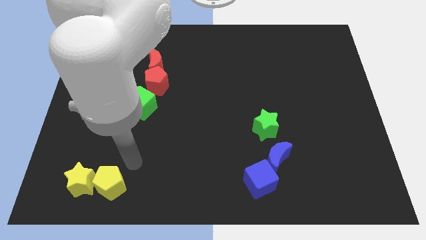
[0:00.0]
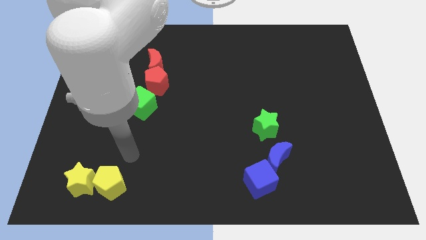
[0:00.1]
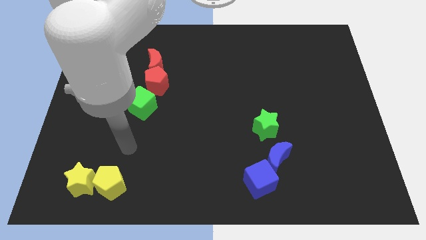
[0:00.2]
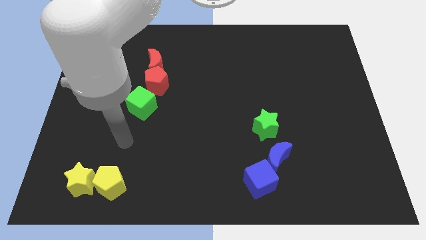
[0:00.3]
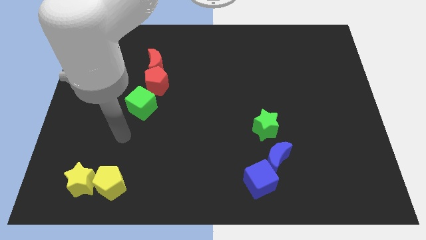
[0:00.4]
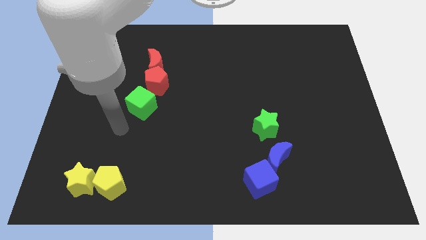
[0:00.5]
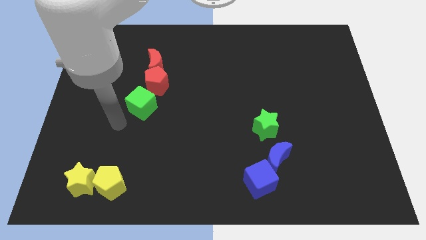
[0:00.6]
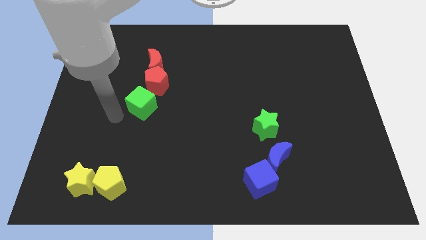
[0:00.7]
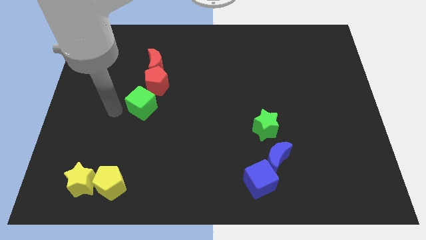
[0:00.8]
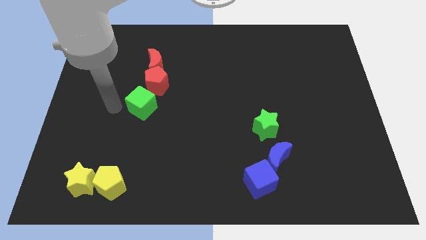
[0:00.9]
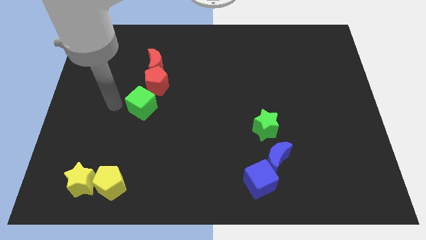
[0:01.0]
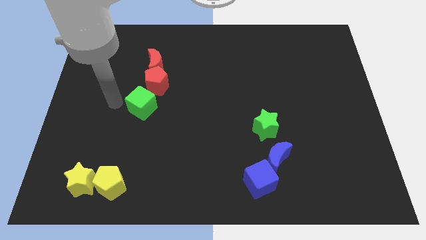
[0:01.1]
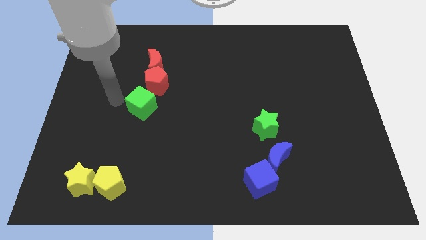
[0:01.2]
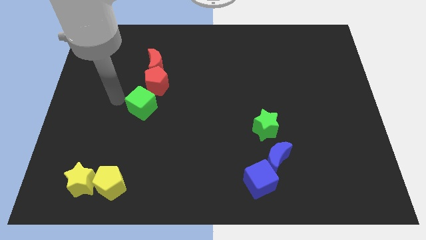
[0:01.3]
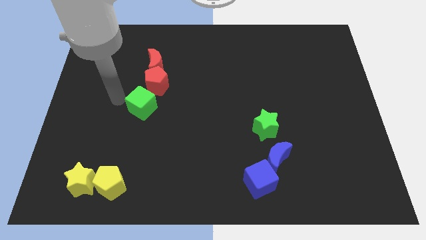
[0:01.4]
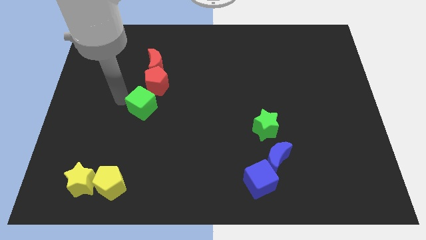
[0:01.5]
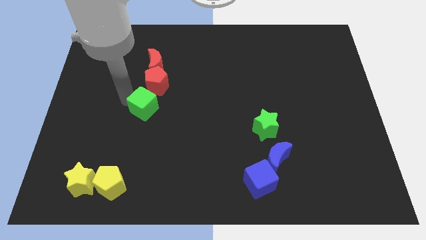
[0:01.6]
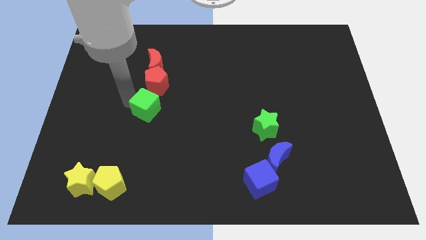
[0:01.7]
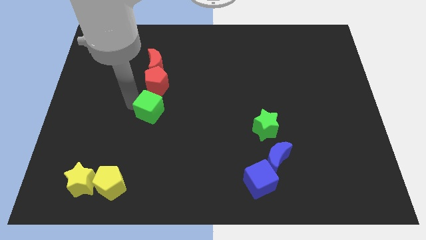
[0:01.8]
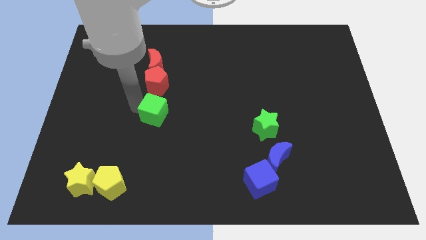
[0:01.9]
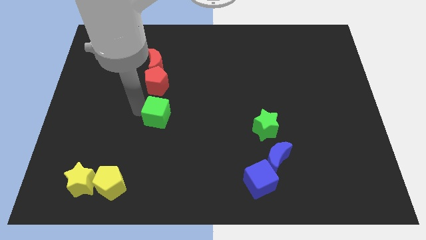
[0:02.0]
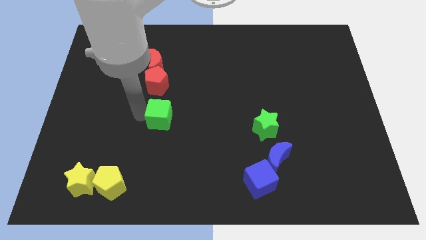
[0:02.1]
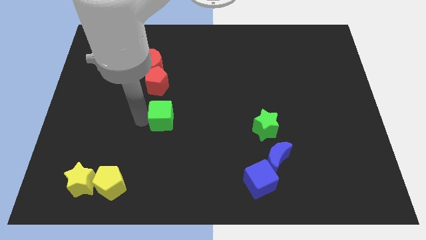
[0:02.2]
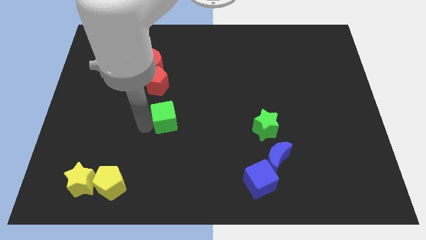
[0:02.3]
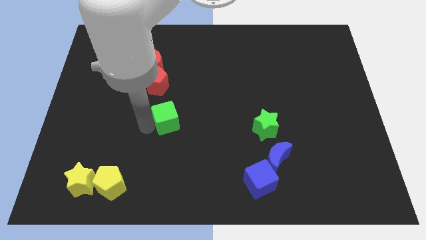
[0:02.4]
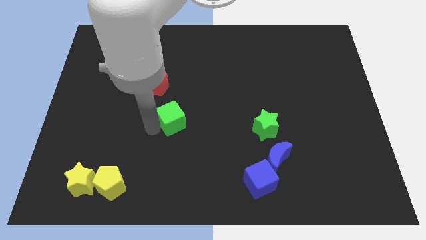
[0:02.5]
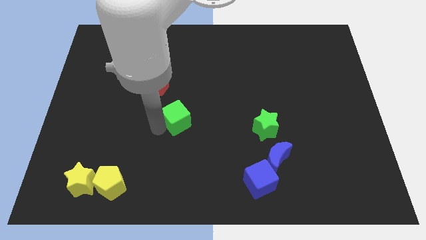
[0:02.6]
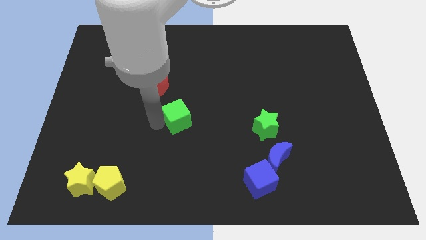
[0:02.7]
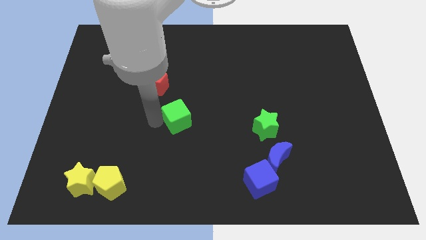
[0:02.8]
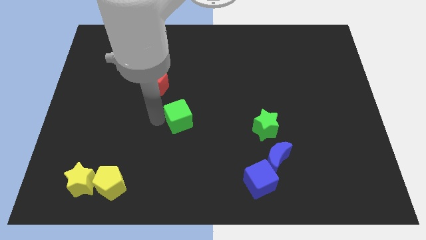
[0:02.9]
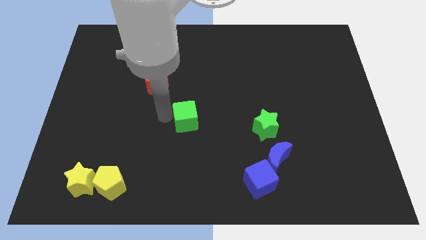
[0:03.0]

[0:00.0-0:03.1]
move the green cube away from the red pentagon

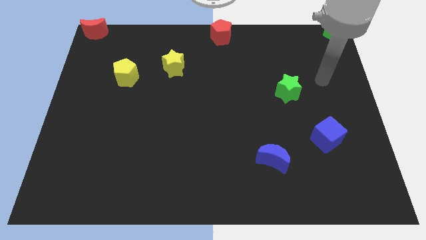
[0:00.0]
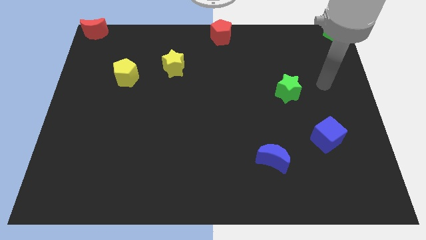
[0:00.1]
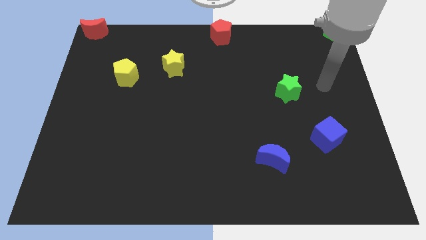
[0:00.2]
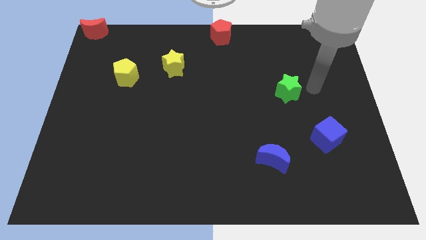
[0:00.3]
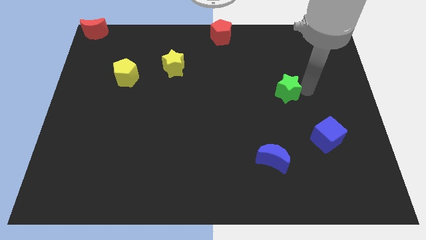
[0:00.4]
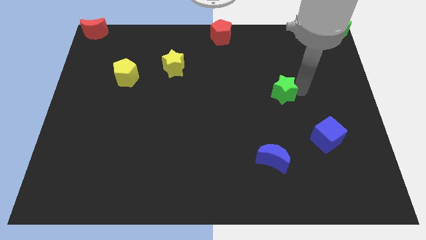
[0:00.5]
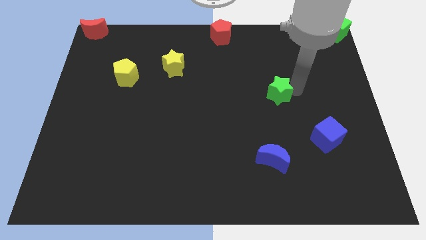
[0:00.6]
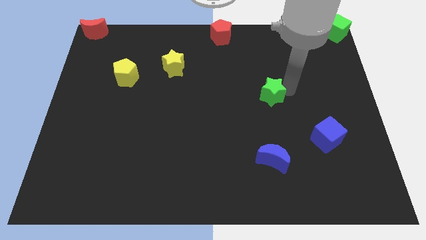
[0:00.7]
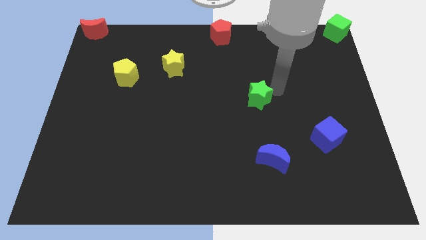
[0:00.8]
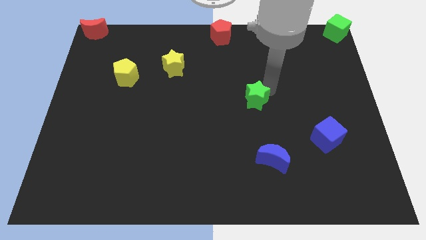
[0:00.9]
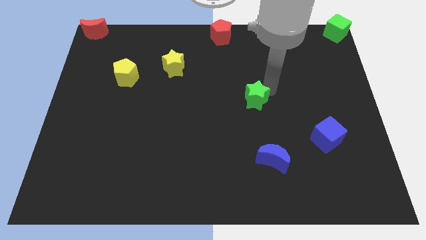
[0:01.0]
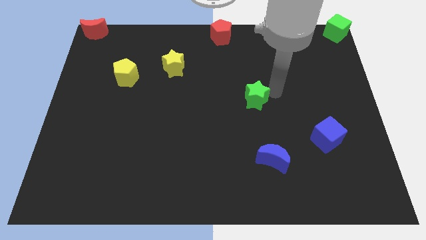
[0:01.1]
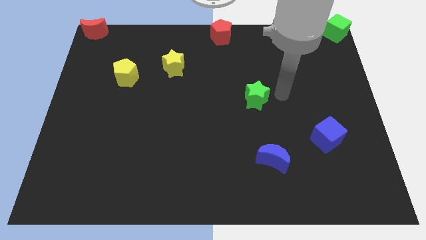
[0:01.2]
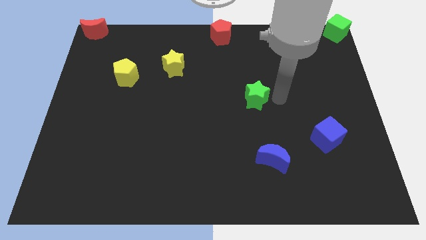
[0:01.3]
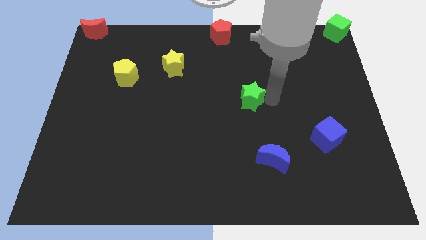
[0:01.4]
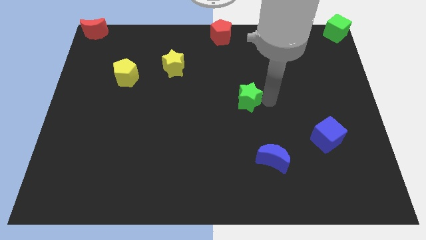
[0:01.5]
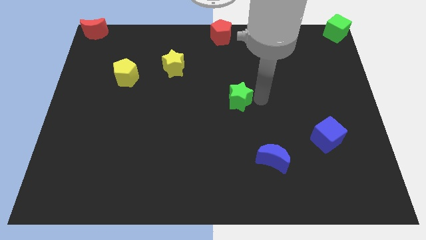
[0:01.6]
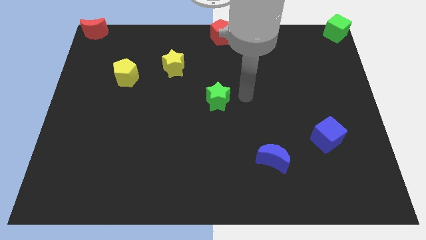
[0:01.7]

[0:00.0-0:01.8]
move the green star below the red pentagon

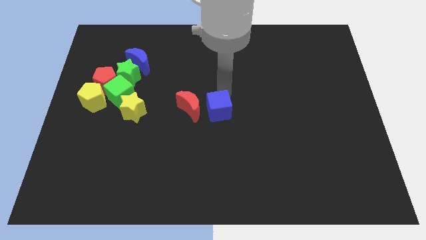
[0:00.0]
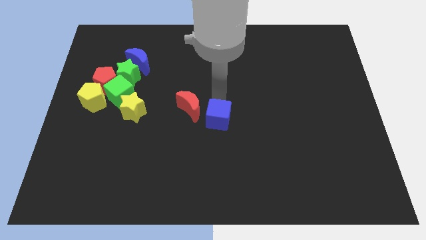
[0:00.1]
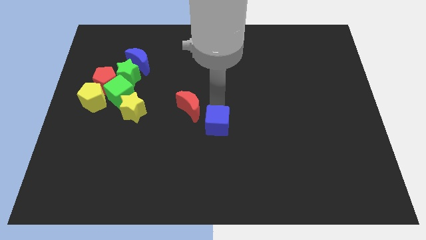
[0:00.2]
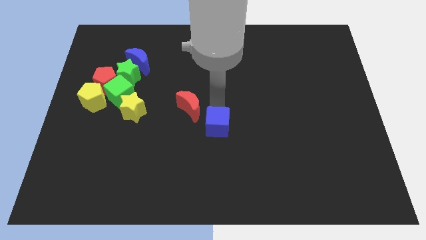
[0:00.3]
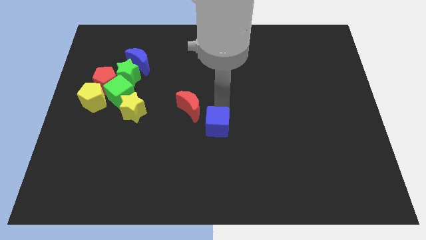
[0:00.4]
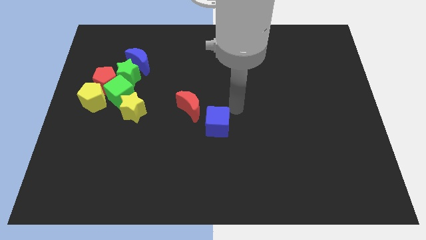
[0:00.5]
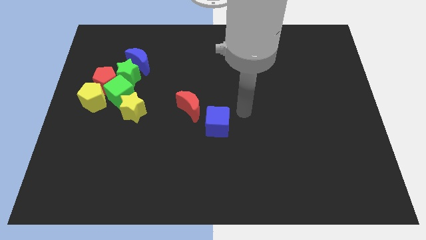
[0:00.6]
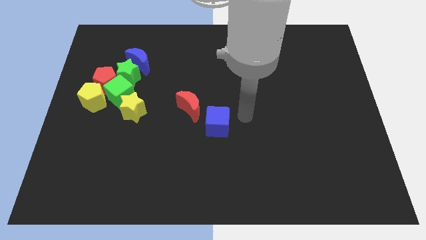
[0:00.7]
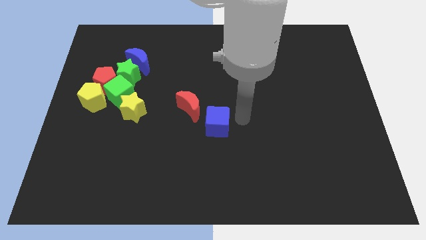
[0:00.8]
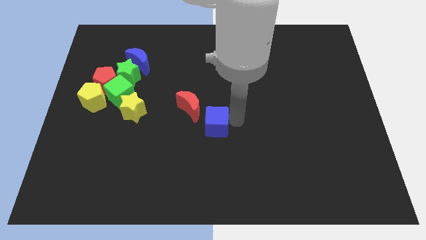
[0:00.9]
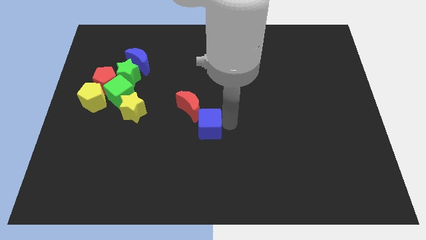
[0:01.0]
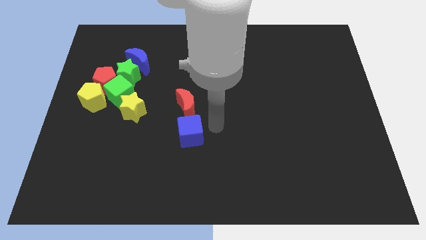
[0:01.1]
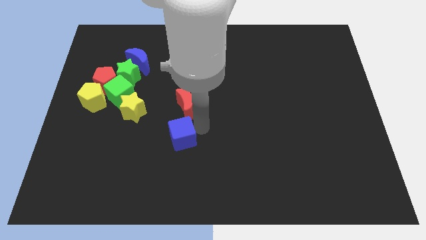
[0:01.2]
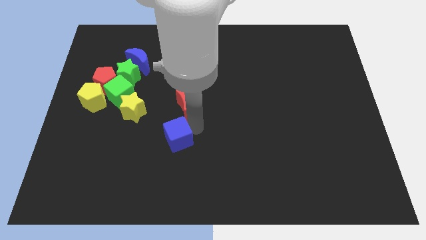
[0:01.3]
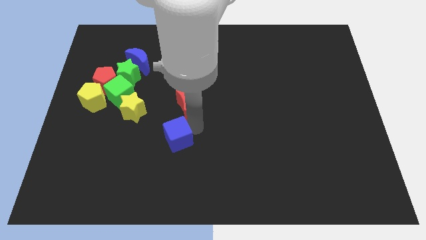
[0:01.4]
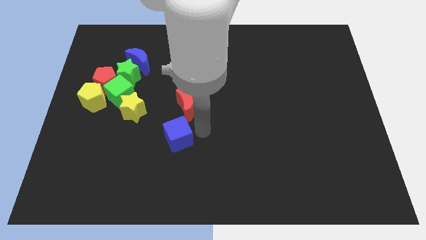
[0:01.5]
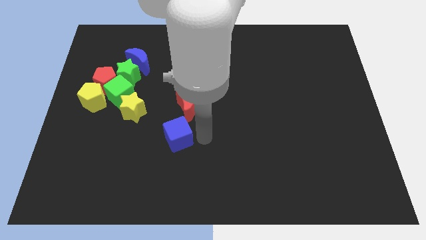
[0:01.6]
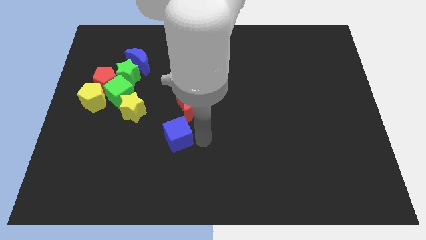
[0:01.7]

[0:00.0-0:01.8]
place the blue cube below the red crescent

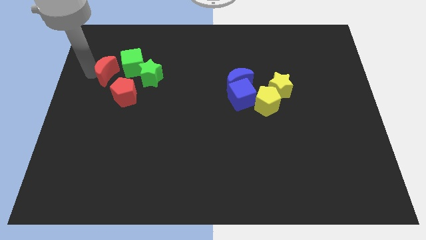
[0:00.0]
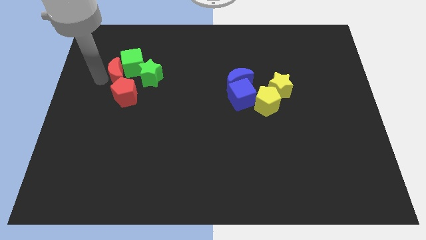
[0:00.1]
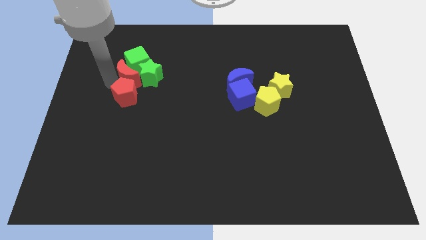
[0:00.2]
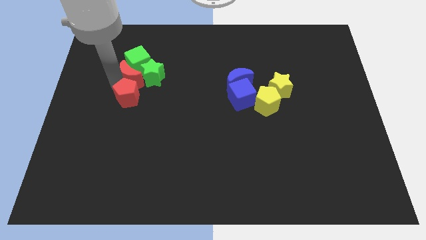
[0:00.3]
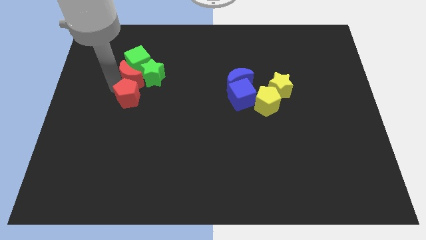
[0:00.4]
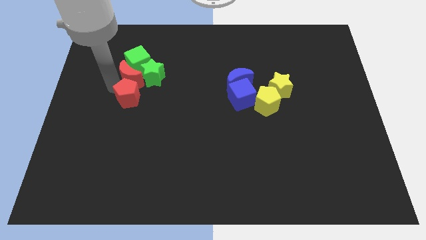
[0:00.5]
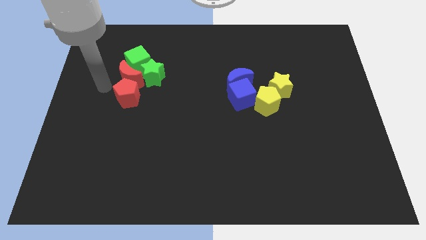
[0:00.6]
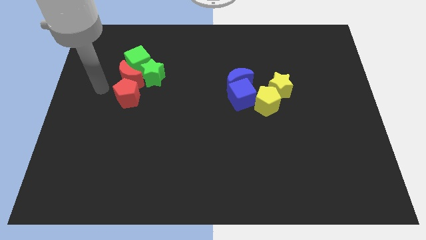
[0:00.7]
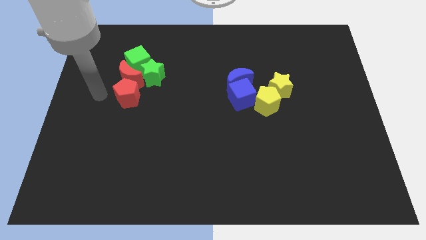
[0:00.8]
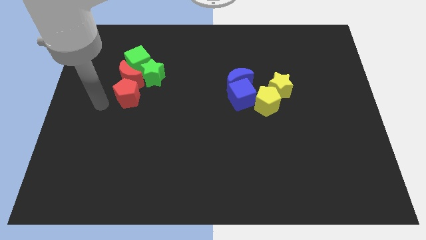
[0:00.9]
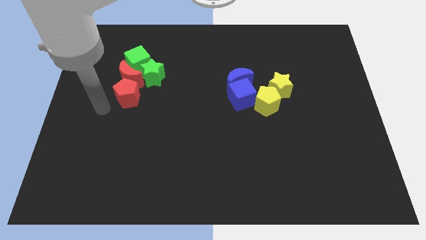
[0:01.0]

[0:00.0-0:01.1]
push the red moon into the green blocks

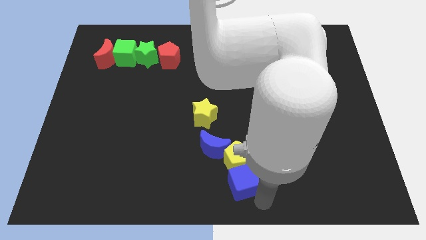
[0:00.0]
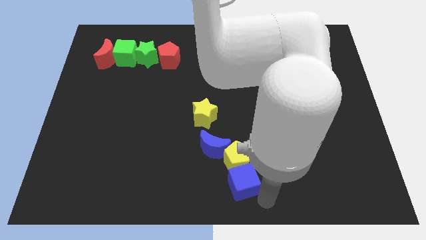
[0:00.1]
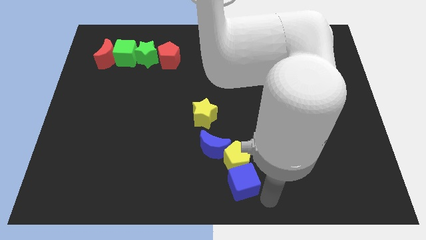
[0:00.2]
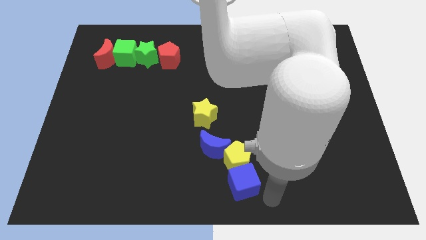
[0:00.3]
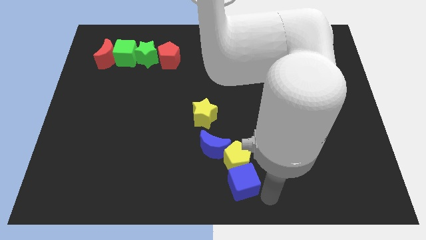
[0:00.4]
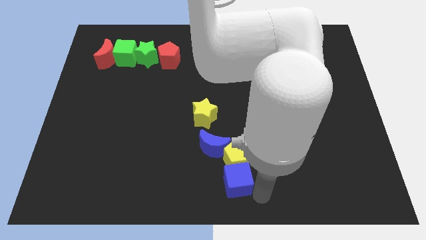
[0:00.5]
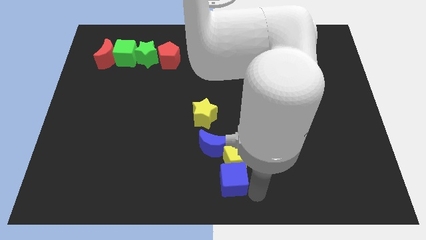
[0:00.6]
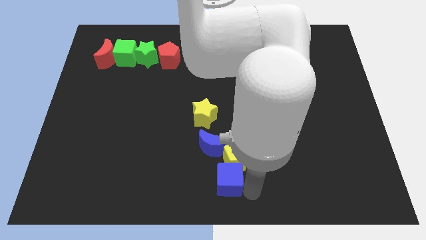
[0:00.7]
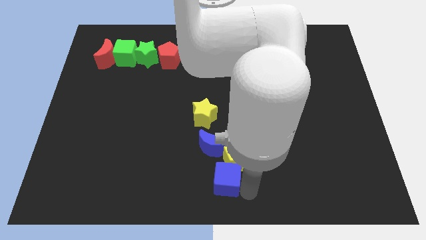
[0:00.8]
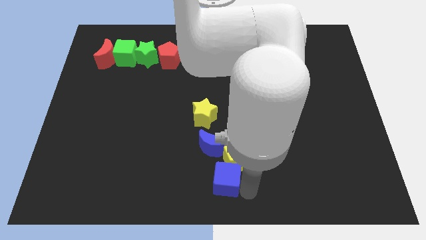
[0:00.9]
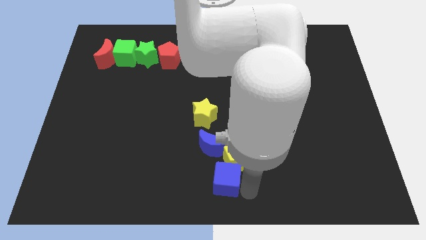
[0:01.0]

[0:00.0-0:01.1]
slightly move the blue cube to the left side of the board
